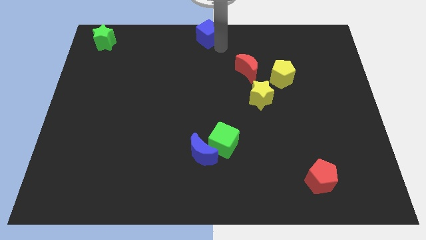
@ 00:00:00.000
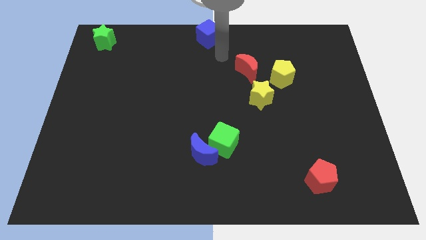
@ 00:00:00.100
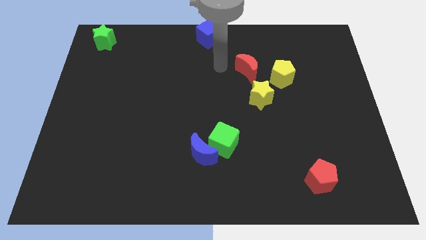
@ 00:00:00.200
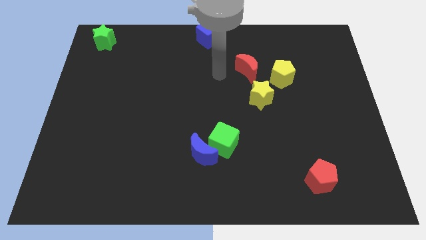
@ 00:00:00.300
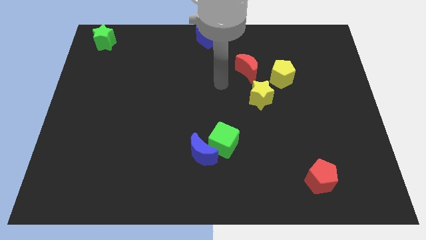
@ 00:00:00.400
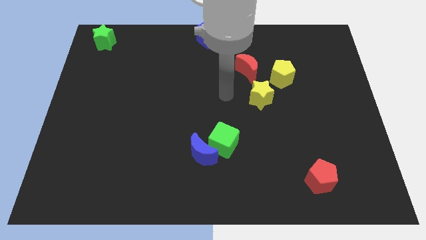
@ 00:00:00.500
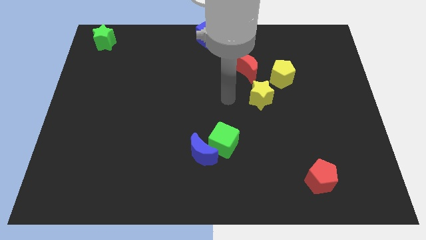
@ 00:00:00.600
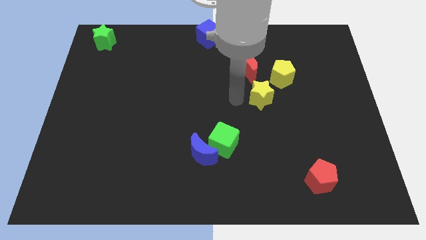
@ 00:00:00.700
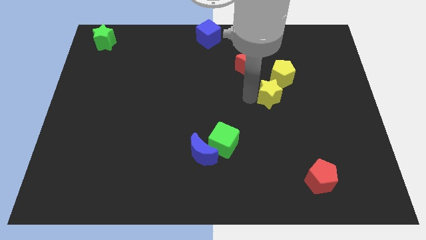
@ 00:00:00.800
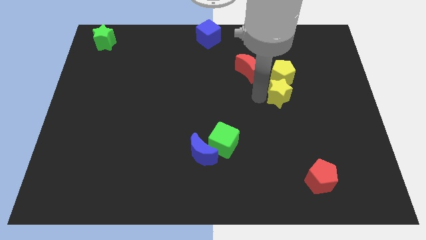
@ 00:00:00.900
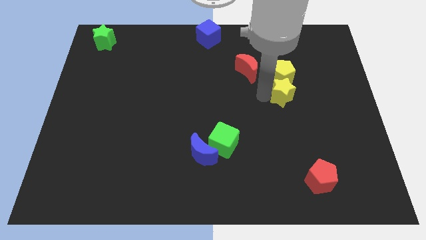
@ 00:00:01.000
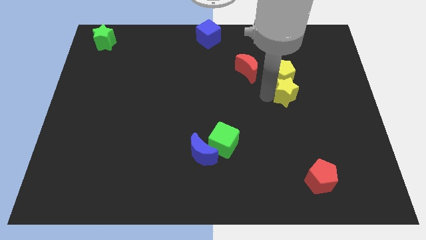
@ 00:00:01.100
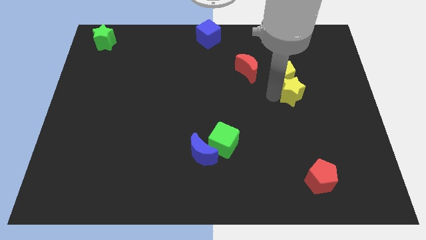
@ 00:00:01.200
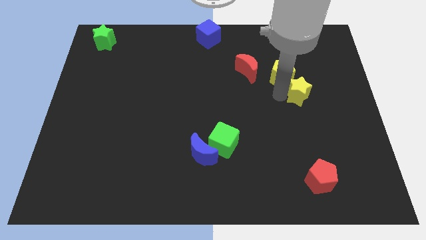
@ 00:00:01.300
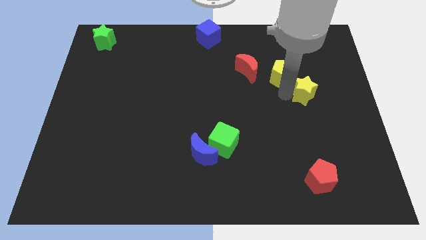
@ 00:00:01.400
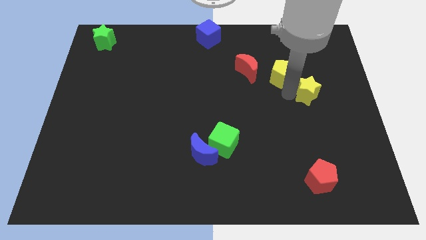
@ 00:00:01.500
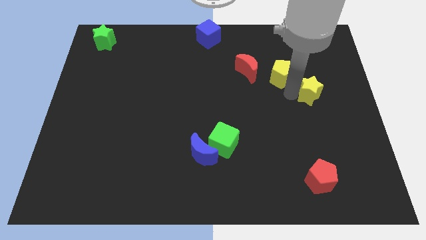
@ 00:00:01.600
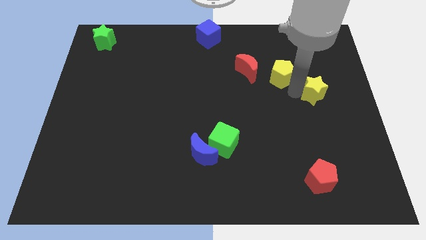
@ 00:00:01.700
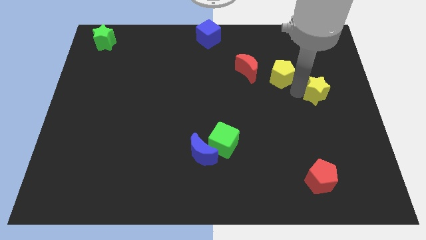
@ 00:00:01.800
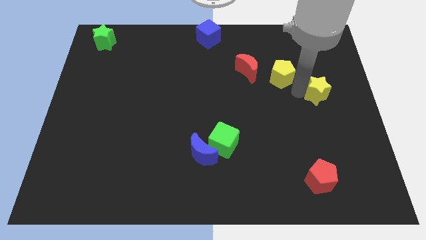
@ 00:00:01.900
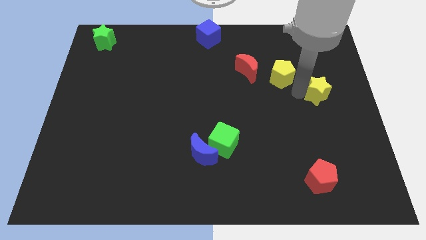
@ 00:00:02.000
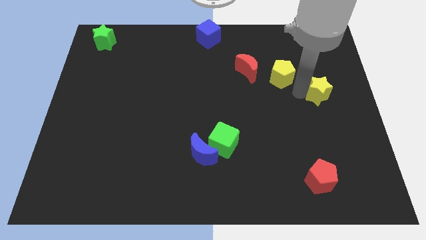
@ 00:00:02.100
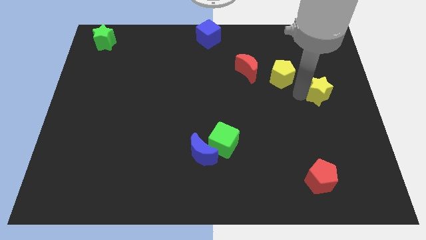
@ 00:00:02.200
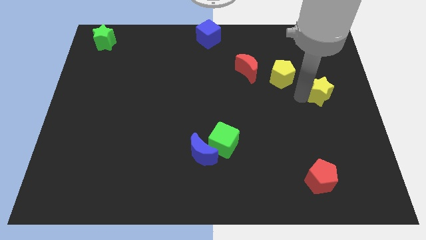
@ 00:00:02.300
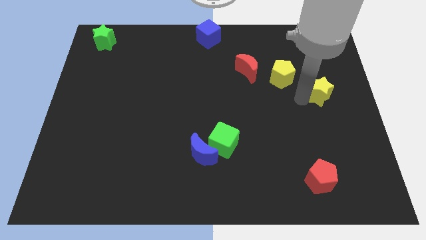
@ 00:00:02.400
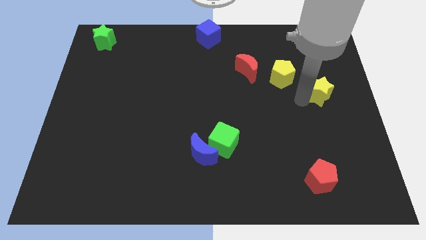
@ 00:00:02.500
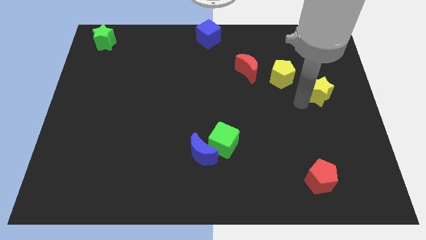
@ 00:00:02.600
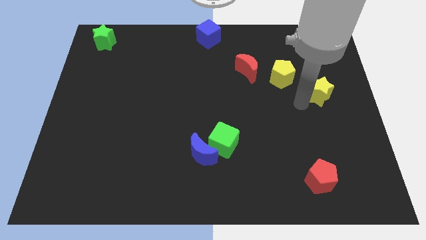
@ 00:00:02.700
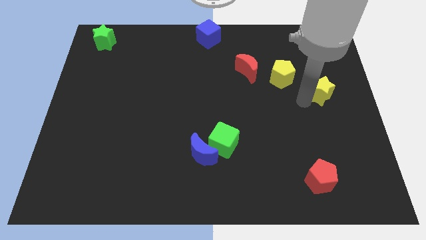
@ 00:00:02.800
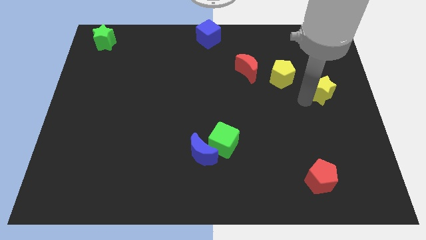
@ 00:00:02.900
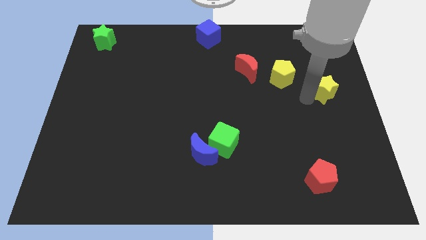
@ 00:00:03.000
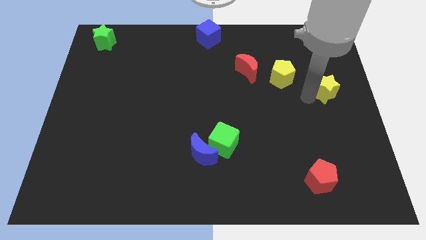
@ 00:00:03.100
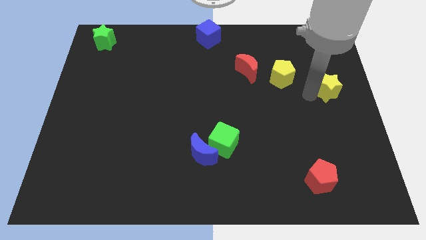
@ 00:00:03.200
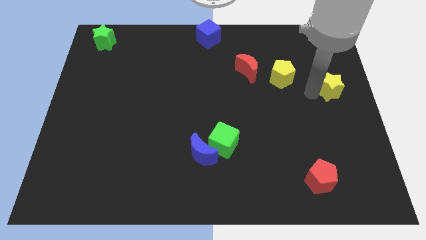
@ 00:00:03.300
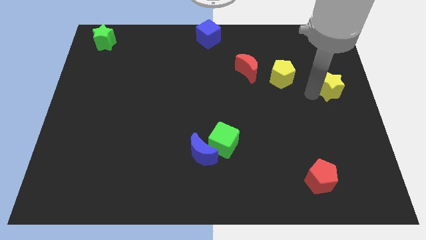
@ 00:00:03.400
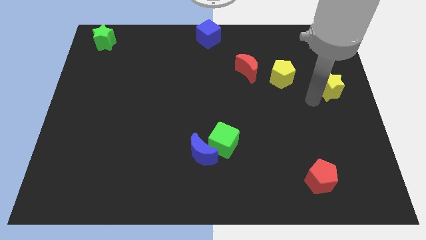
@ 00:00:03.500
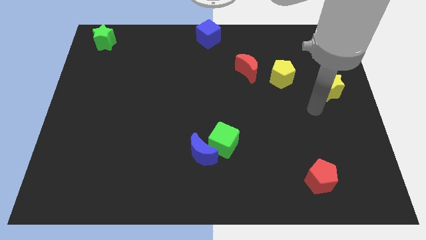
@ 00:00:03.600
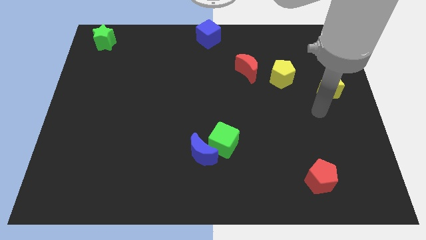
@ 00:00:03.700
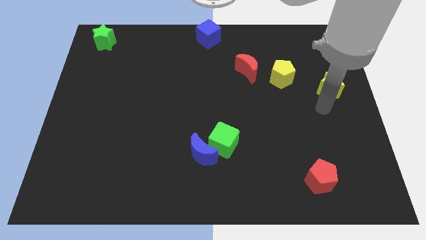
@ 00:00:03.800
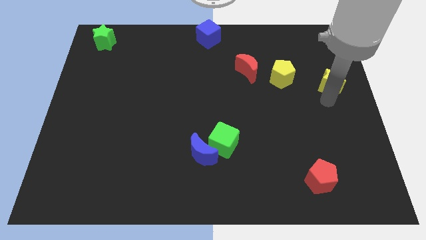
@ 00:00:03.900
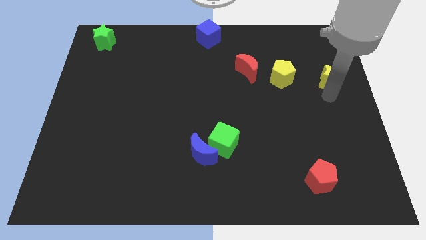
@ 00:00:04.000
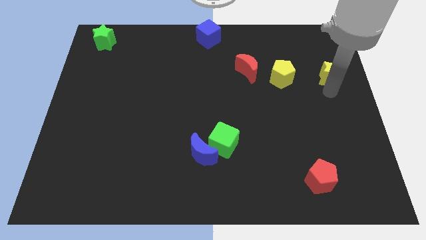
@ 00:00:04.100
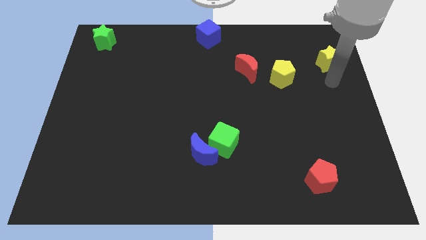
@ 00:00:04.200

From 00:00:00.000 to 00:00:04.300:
put the yellow star to the right of the yellow pentagon

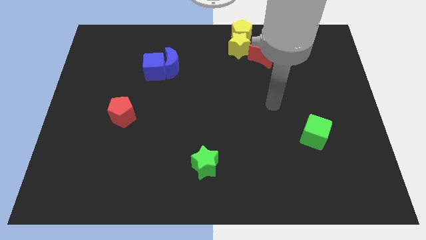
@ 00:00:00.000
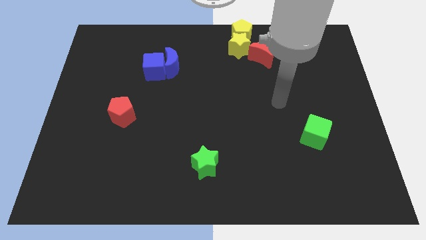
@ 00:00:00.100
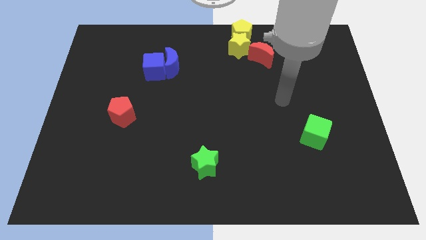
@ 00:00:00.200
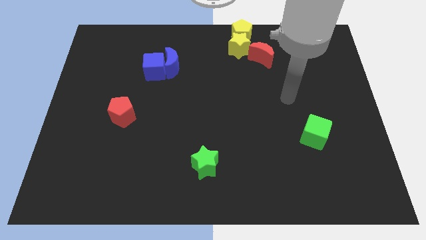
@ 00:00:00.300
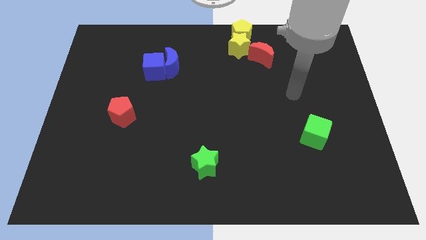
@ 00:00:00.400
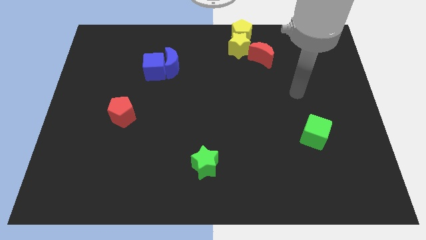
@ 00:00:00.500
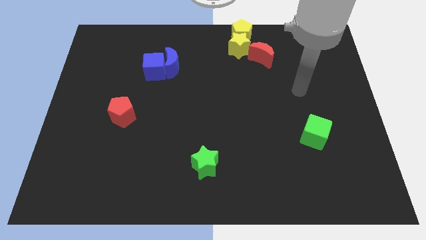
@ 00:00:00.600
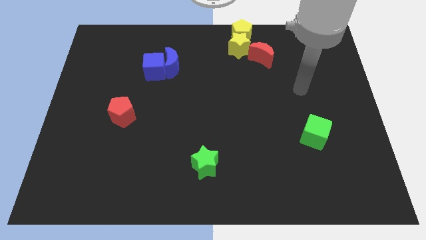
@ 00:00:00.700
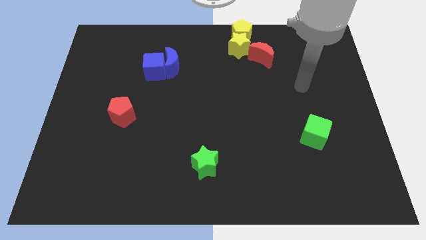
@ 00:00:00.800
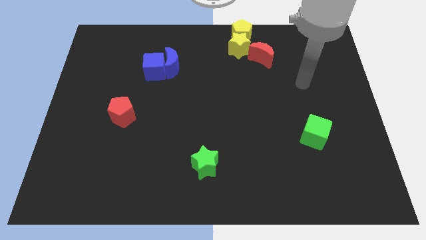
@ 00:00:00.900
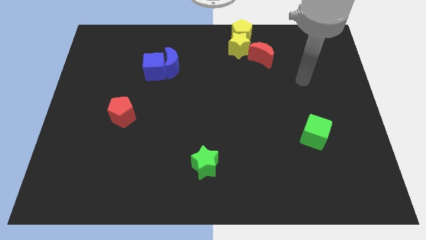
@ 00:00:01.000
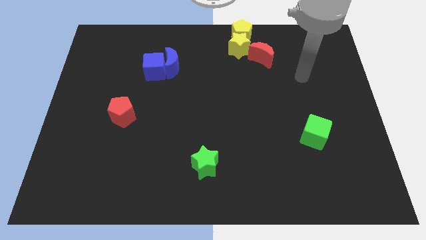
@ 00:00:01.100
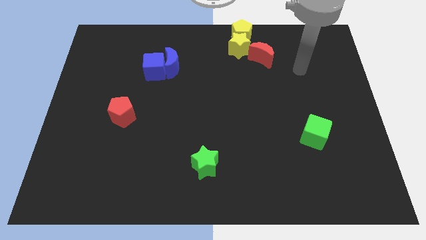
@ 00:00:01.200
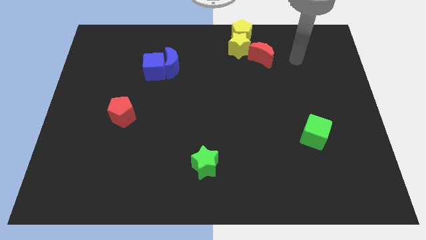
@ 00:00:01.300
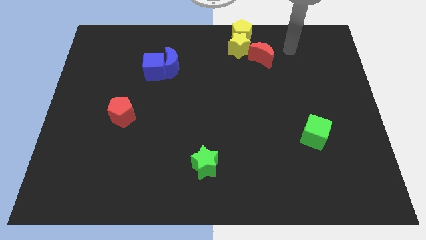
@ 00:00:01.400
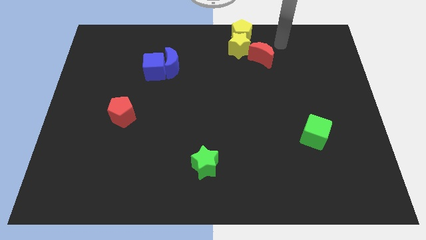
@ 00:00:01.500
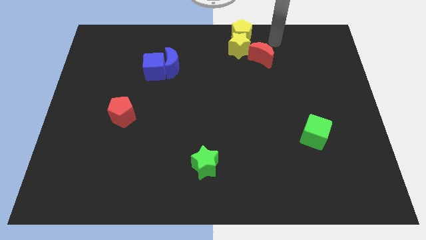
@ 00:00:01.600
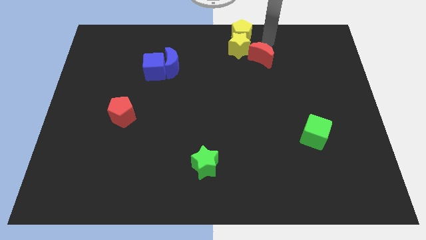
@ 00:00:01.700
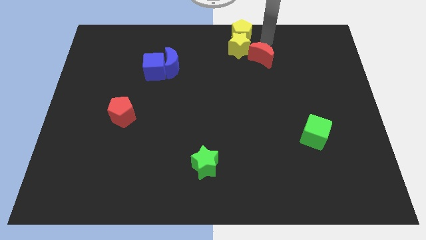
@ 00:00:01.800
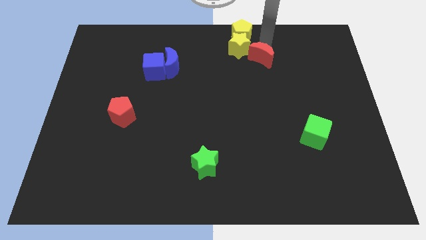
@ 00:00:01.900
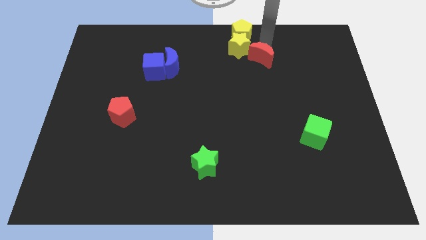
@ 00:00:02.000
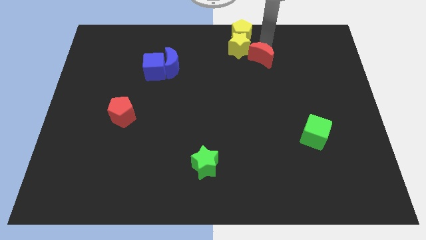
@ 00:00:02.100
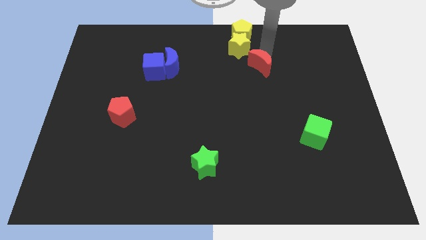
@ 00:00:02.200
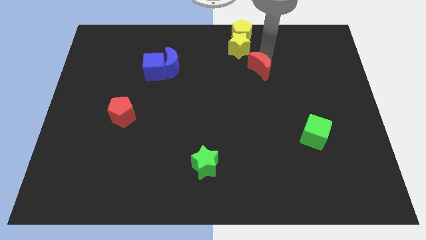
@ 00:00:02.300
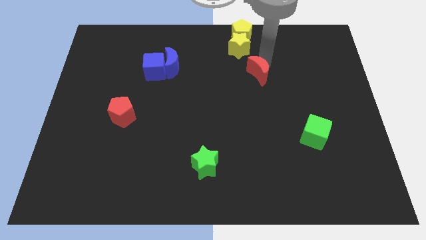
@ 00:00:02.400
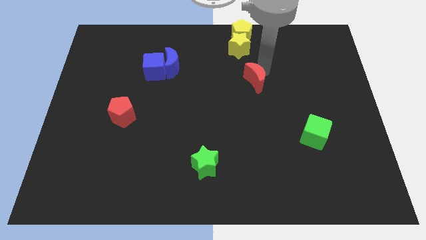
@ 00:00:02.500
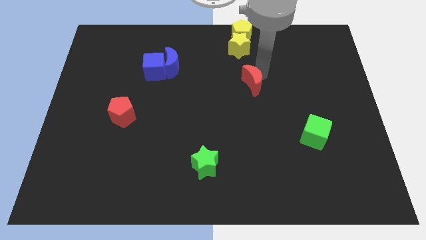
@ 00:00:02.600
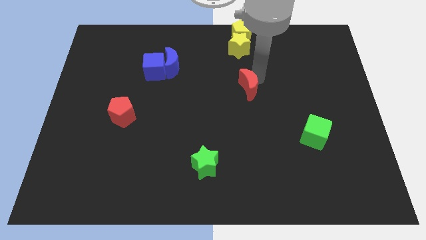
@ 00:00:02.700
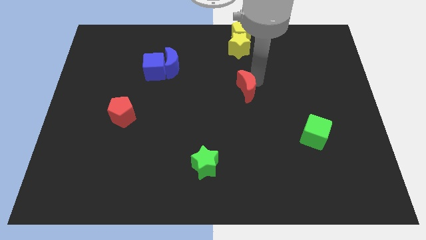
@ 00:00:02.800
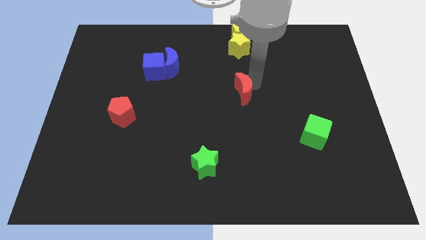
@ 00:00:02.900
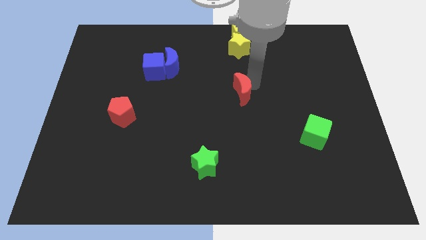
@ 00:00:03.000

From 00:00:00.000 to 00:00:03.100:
push the red crescent below the group of yellow blocks

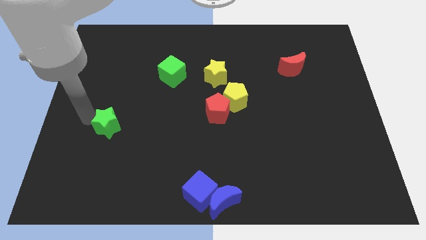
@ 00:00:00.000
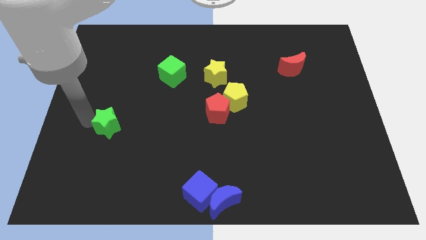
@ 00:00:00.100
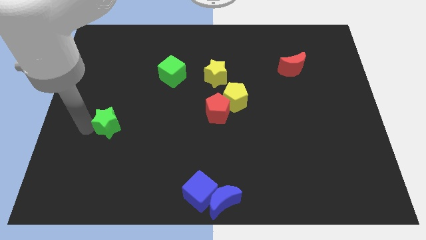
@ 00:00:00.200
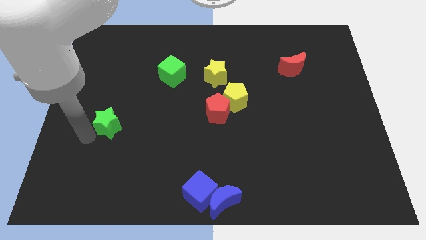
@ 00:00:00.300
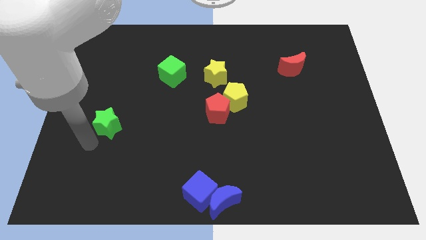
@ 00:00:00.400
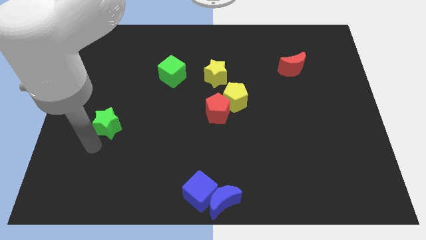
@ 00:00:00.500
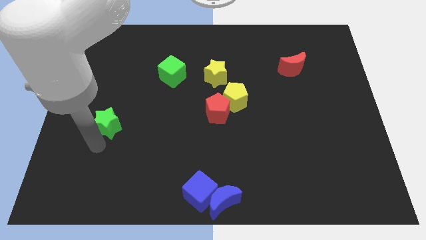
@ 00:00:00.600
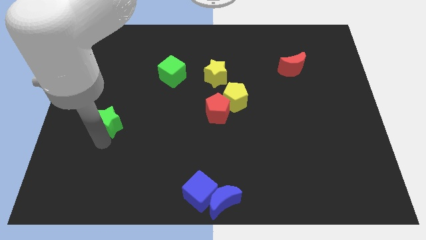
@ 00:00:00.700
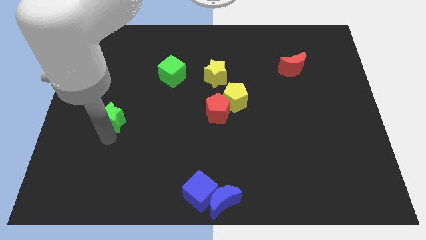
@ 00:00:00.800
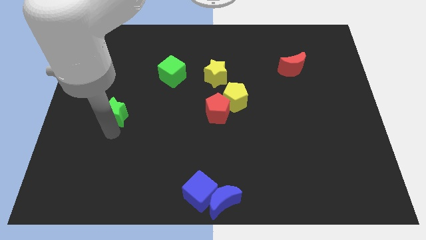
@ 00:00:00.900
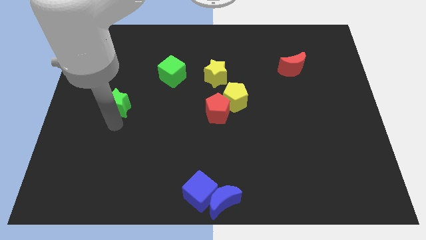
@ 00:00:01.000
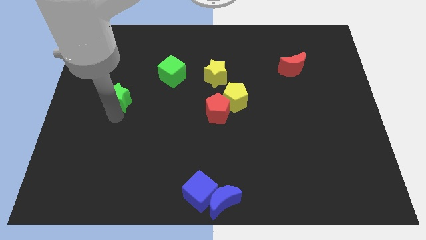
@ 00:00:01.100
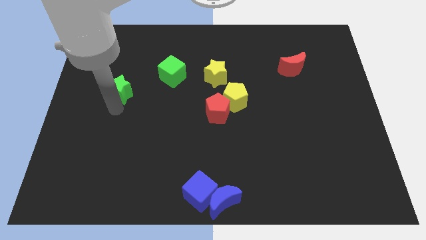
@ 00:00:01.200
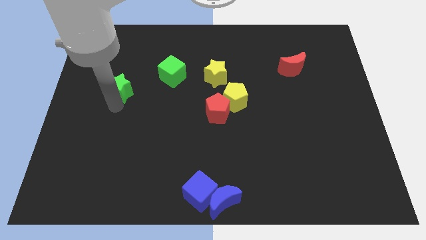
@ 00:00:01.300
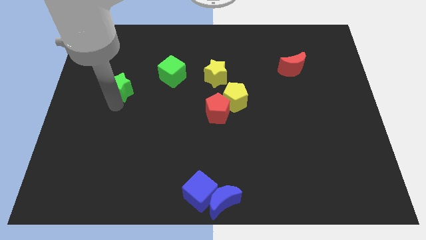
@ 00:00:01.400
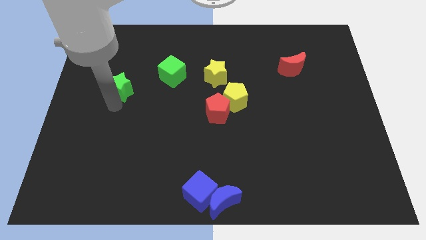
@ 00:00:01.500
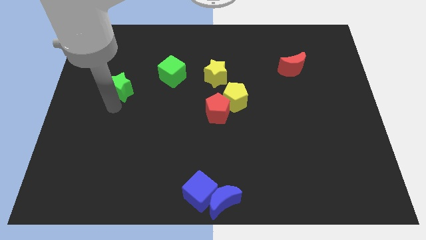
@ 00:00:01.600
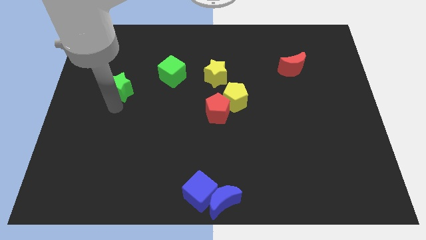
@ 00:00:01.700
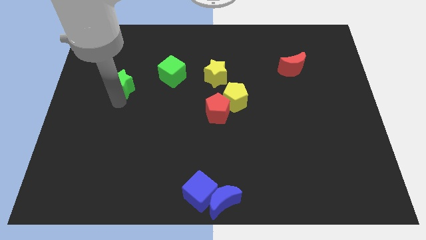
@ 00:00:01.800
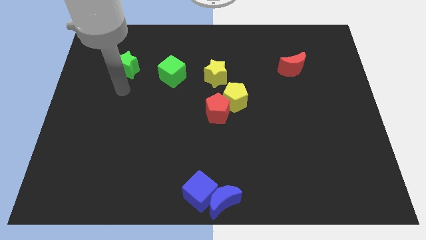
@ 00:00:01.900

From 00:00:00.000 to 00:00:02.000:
push green star beside green cube on the left
